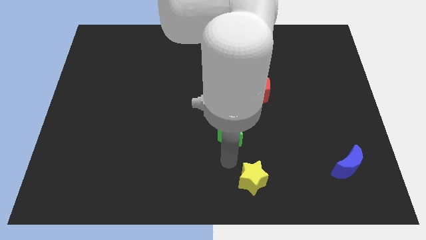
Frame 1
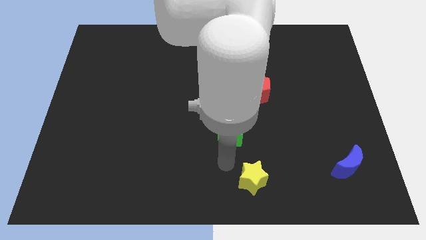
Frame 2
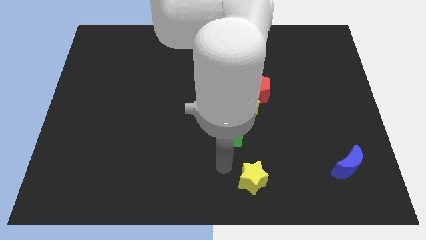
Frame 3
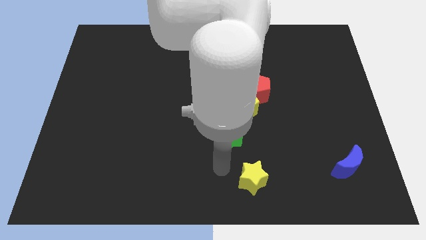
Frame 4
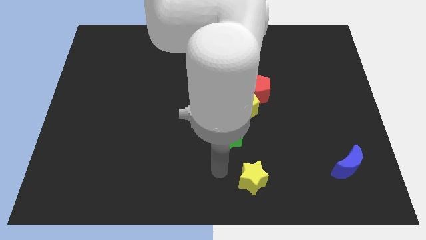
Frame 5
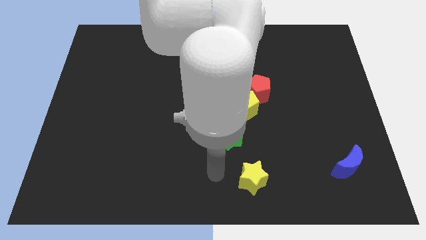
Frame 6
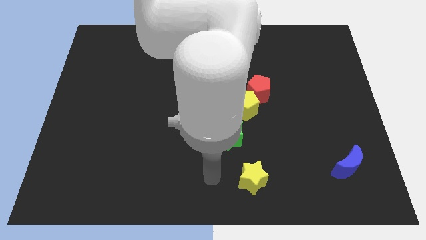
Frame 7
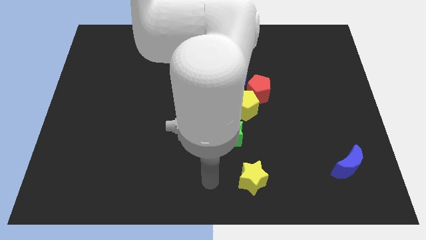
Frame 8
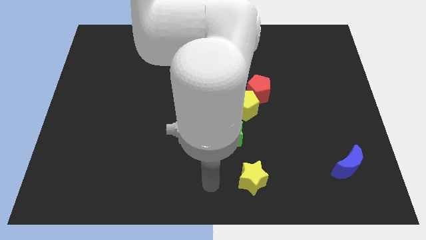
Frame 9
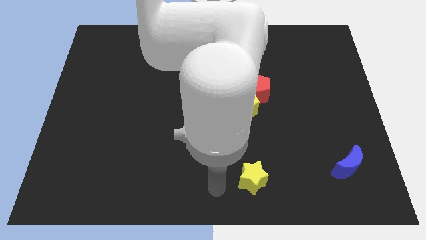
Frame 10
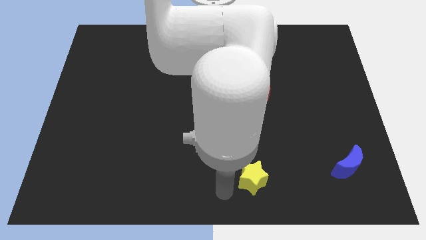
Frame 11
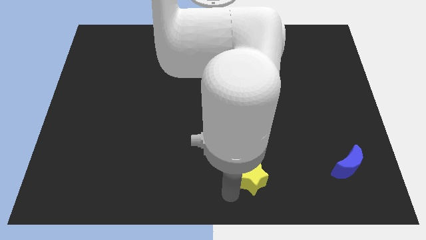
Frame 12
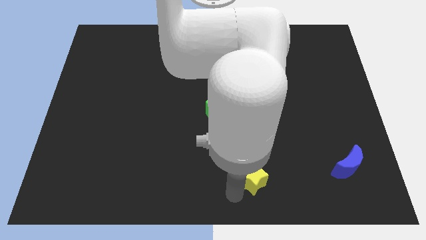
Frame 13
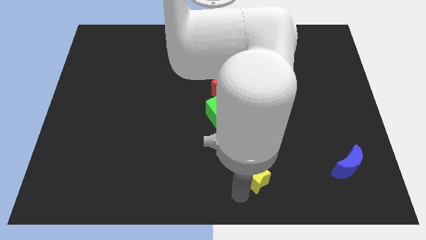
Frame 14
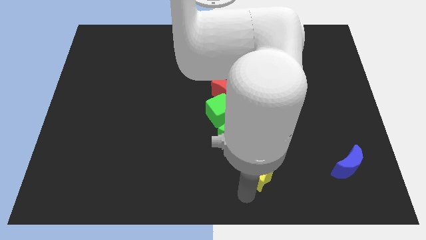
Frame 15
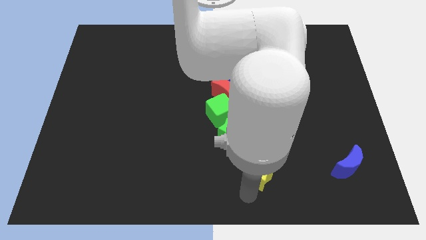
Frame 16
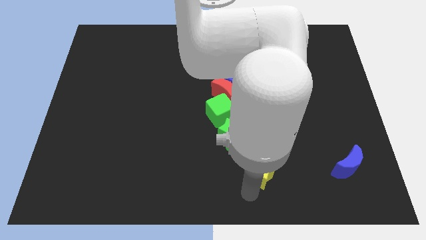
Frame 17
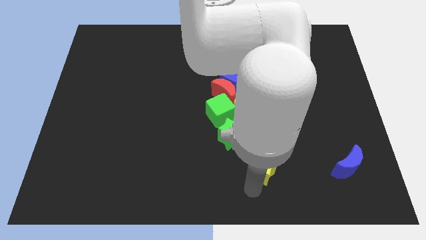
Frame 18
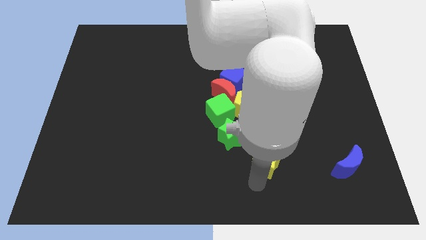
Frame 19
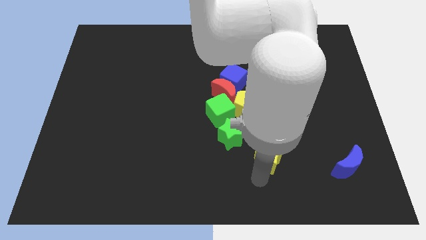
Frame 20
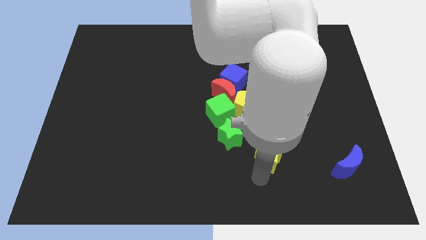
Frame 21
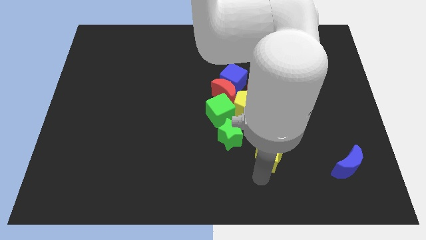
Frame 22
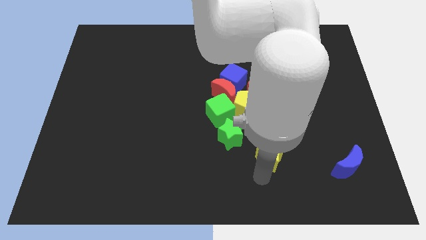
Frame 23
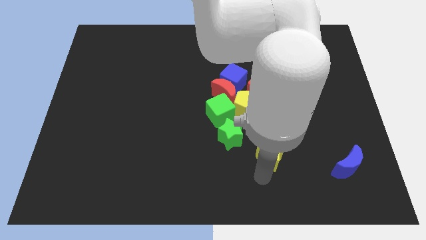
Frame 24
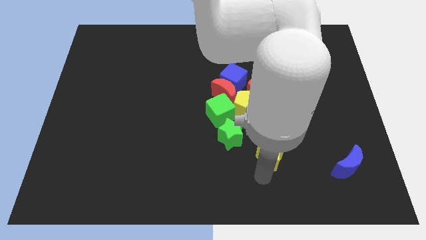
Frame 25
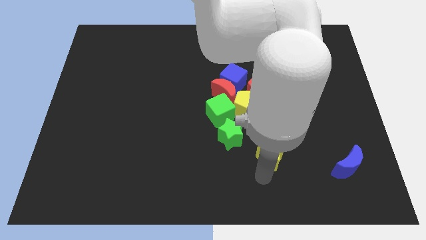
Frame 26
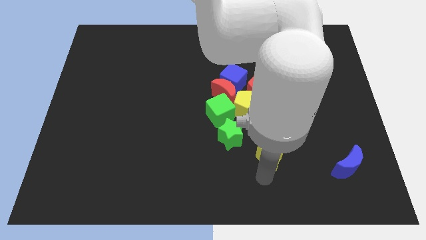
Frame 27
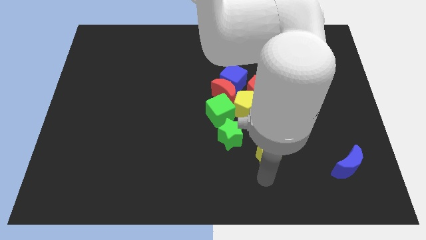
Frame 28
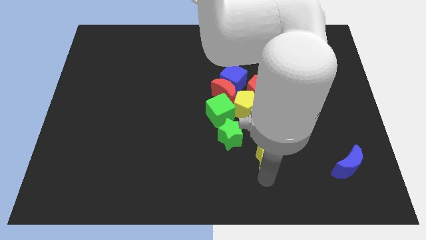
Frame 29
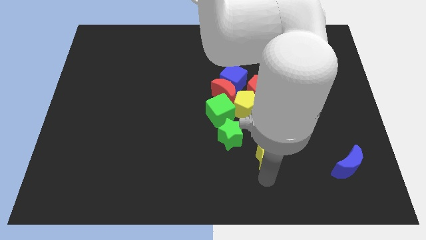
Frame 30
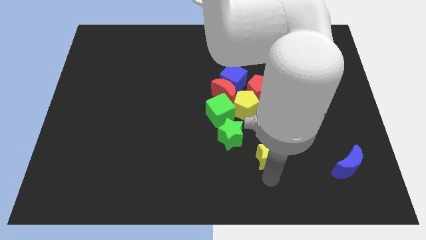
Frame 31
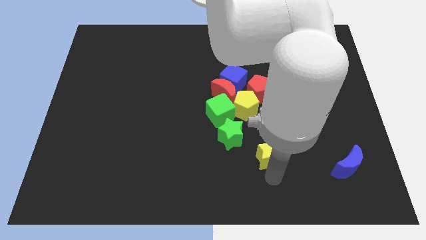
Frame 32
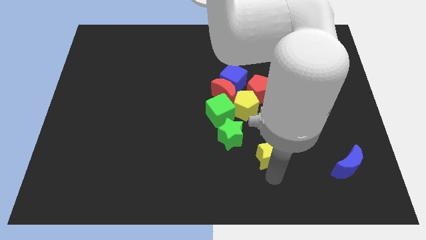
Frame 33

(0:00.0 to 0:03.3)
place yellow star to the bottom right of the green star

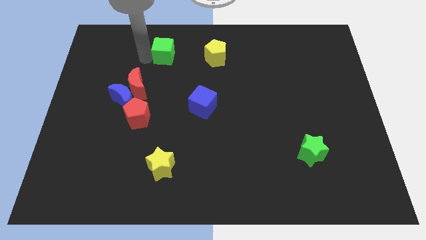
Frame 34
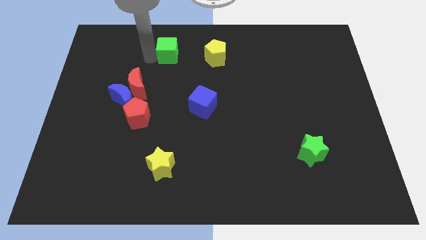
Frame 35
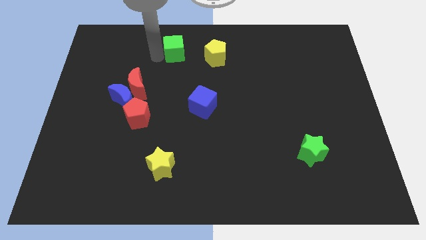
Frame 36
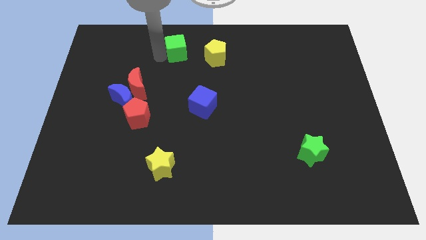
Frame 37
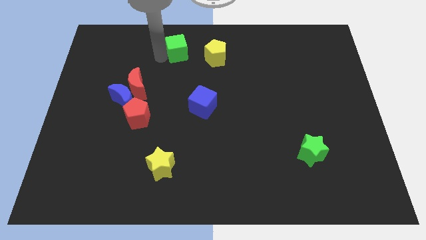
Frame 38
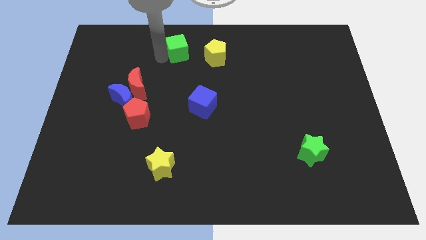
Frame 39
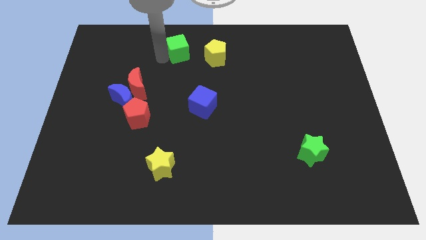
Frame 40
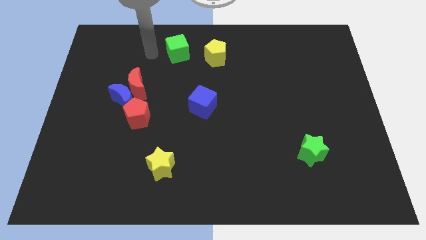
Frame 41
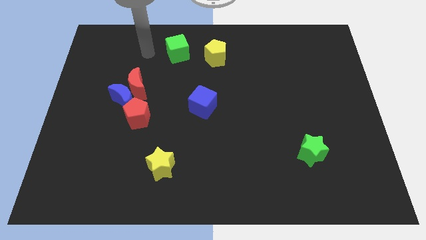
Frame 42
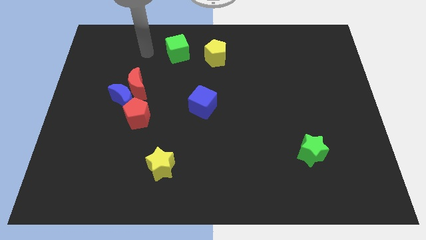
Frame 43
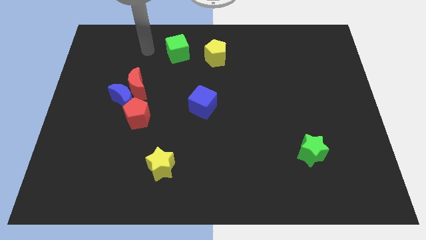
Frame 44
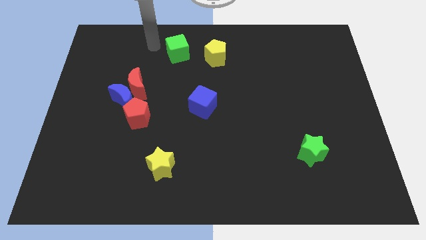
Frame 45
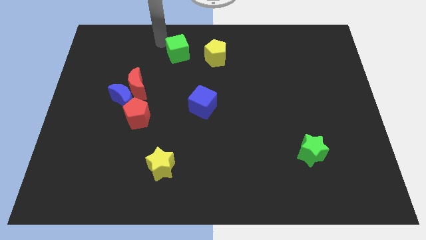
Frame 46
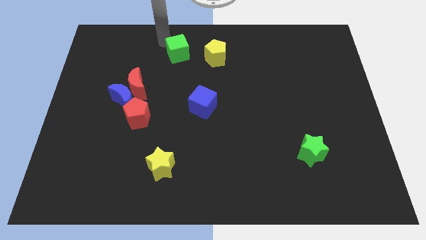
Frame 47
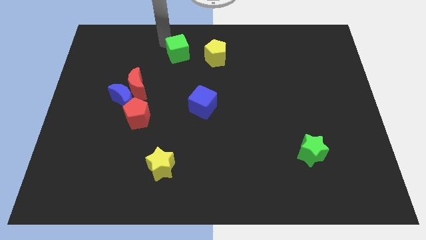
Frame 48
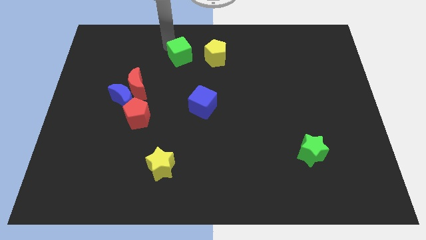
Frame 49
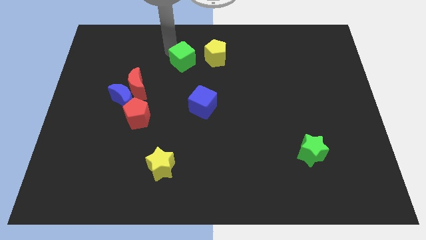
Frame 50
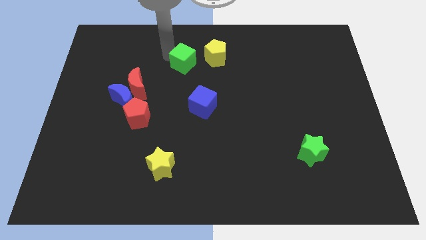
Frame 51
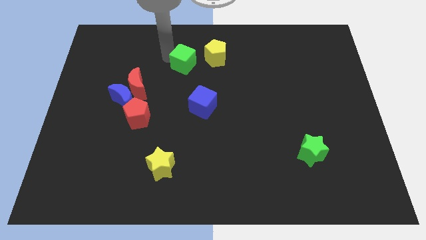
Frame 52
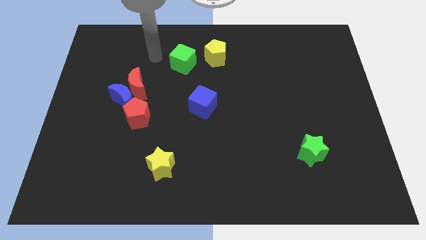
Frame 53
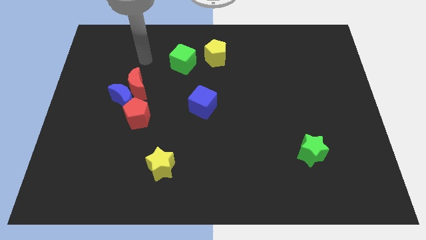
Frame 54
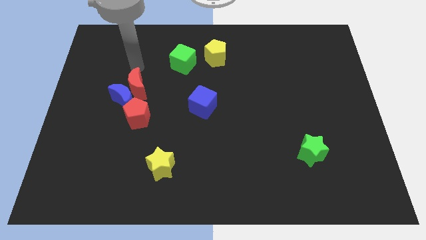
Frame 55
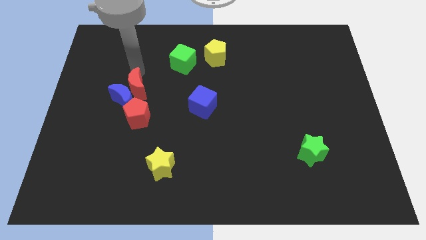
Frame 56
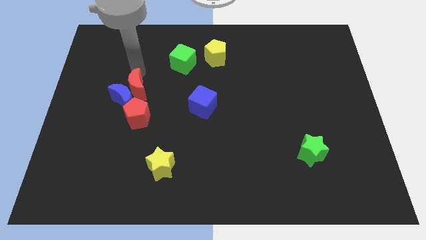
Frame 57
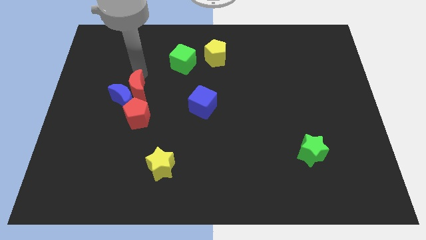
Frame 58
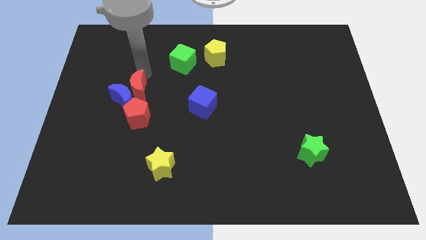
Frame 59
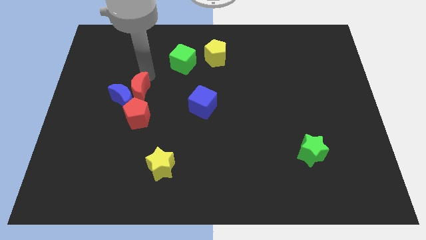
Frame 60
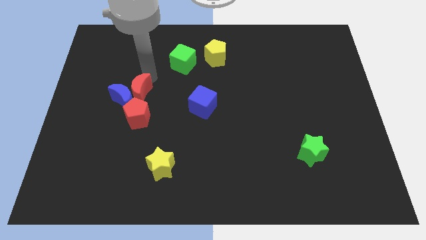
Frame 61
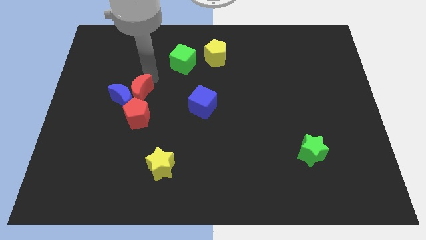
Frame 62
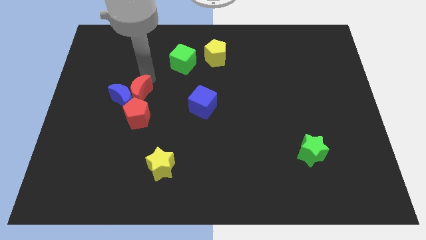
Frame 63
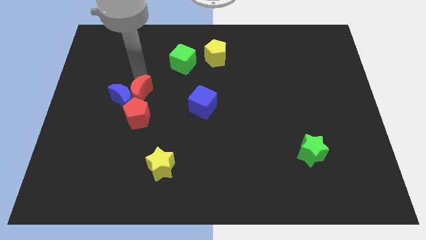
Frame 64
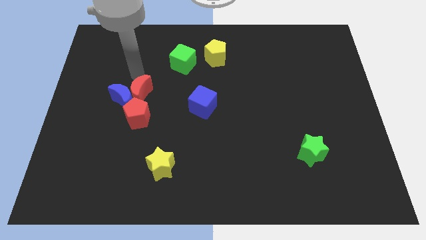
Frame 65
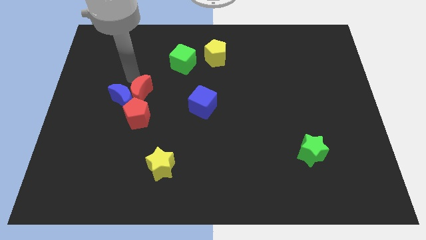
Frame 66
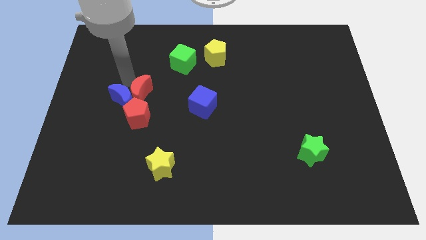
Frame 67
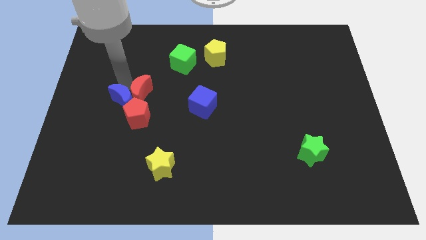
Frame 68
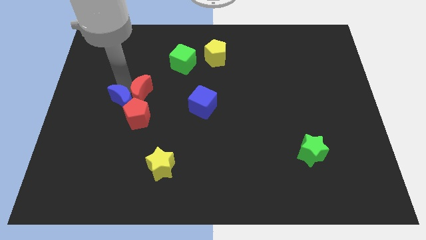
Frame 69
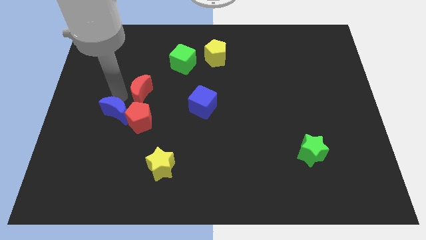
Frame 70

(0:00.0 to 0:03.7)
slightly move the green cube left to the yellow pentagon

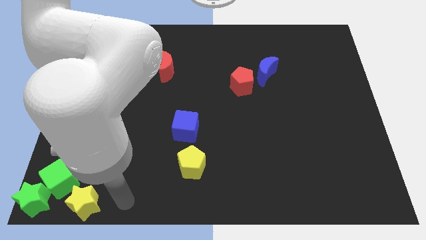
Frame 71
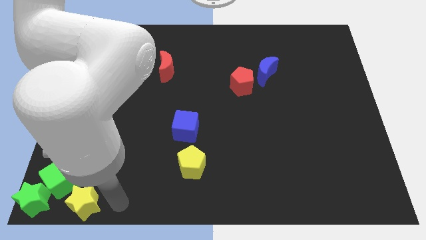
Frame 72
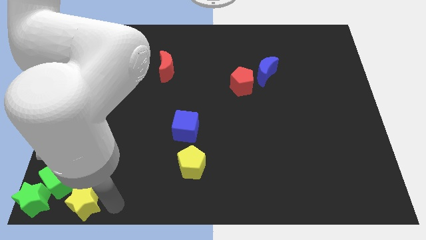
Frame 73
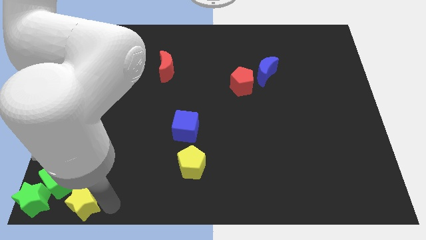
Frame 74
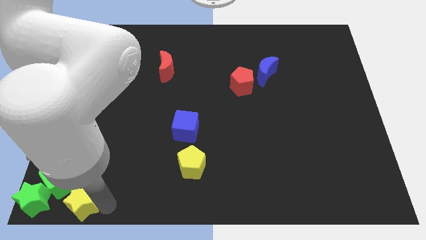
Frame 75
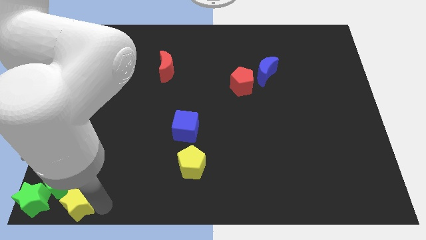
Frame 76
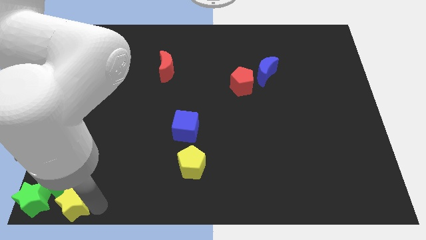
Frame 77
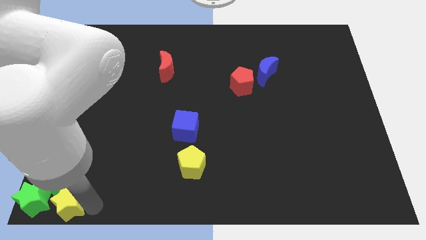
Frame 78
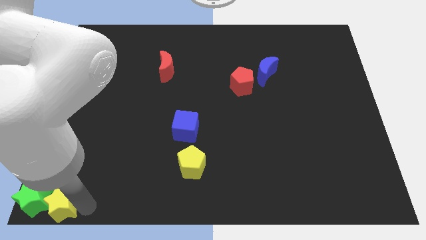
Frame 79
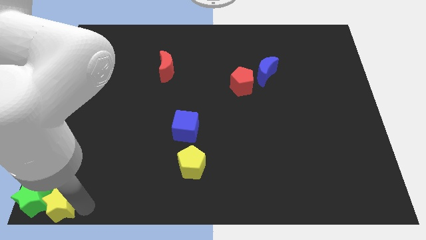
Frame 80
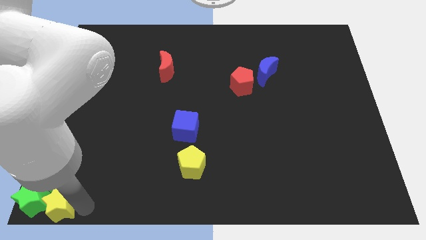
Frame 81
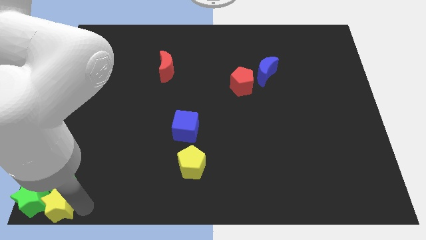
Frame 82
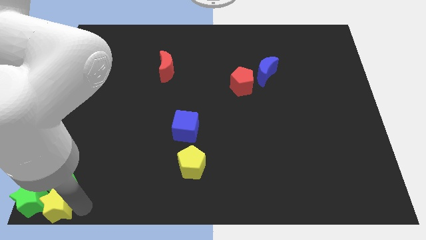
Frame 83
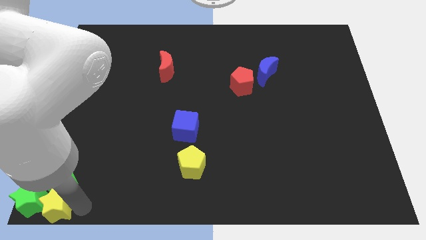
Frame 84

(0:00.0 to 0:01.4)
push yellow star into the green star

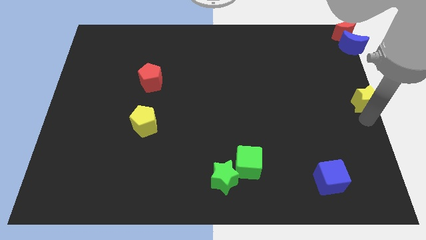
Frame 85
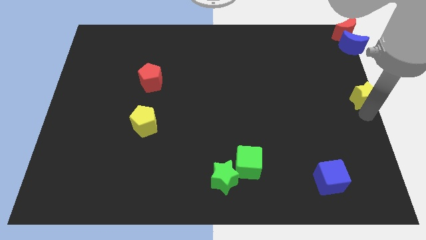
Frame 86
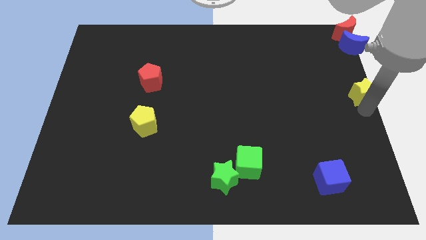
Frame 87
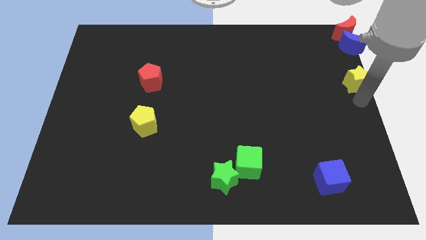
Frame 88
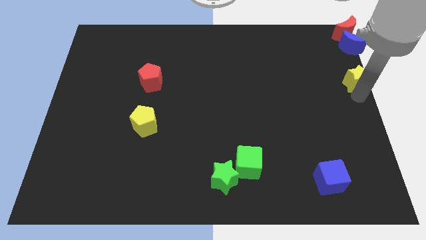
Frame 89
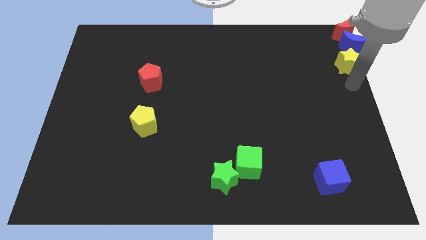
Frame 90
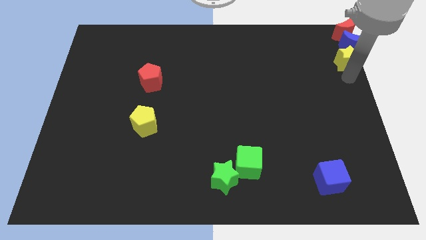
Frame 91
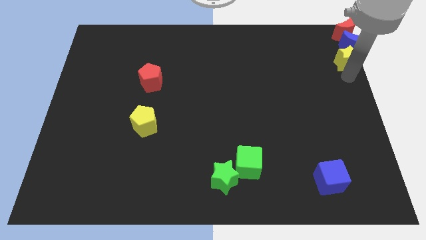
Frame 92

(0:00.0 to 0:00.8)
push yellow star towards blue moon
